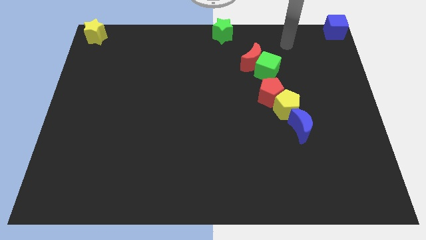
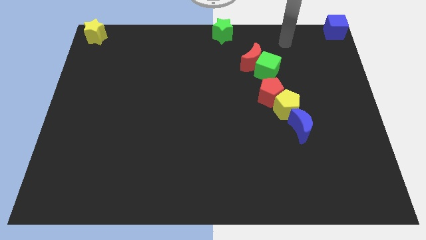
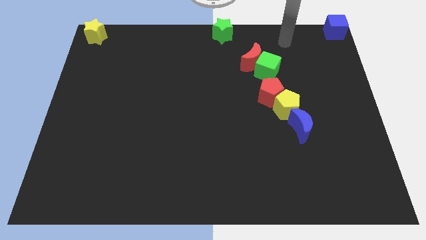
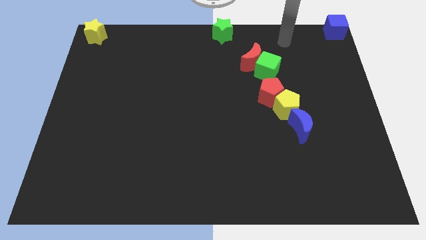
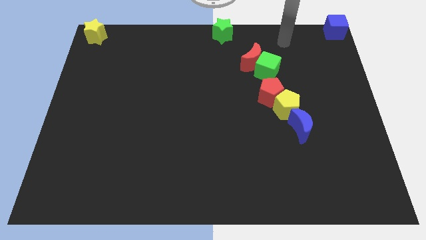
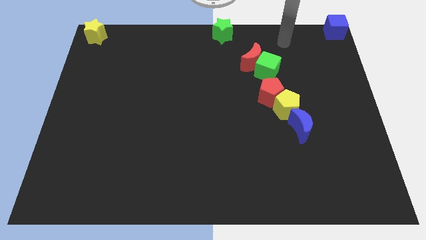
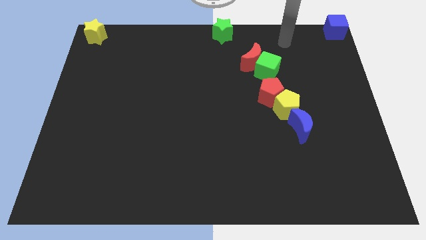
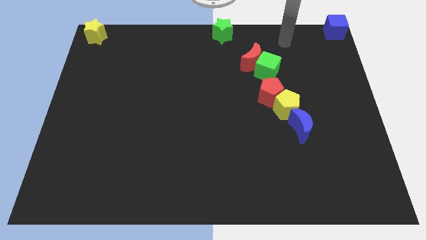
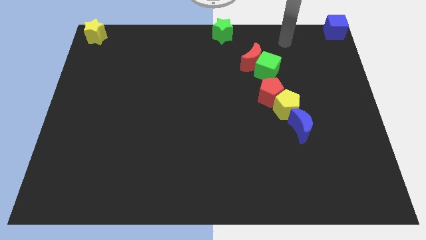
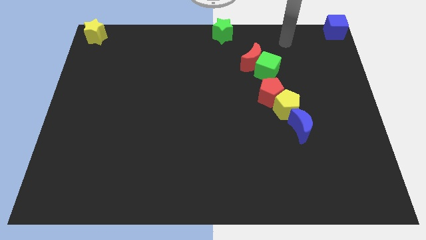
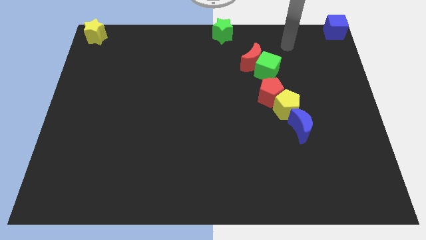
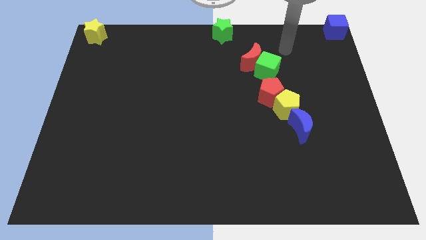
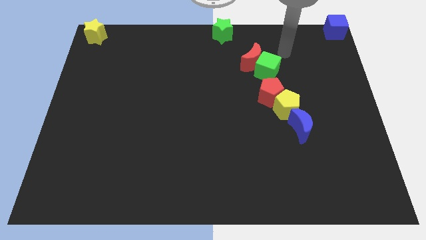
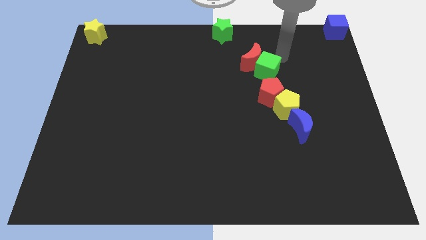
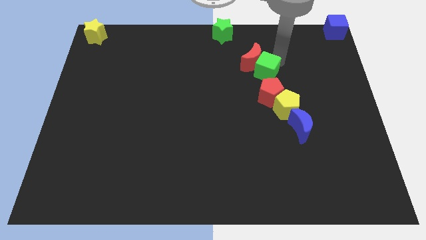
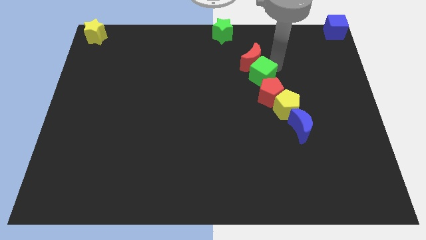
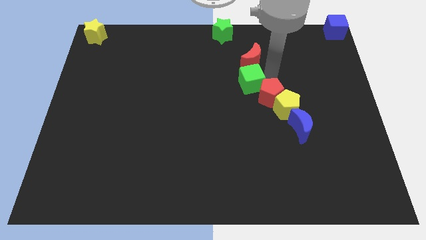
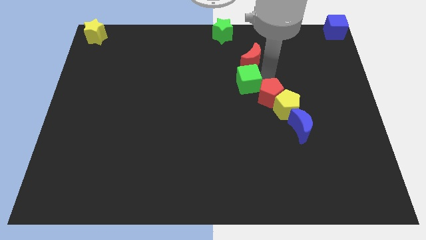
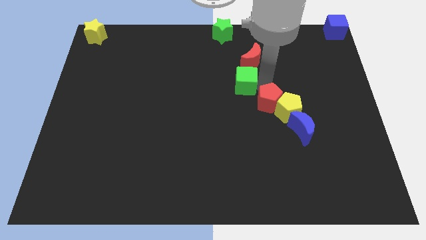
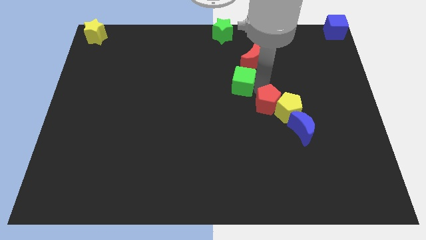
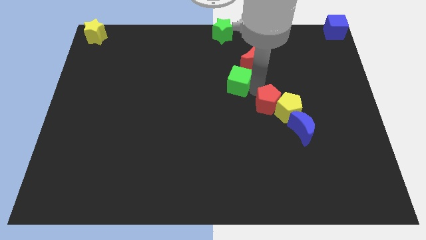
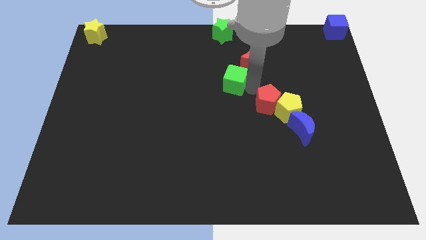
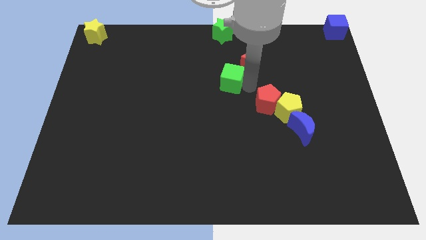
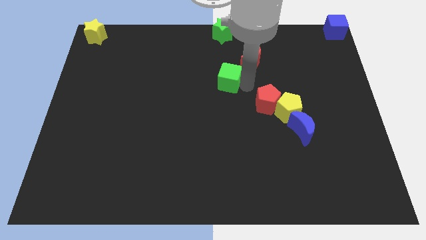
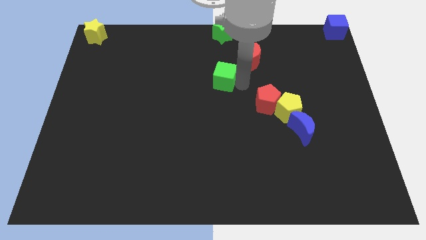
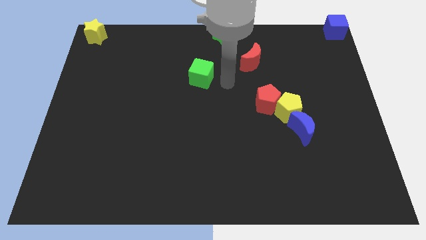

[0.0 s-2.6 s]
separate the green cube and red pentagon

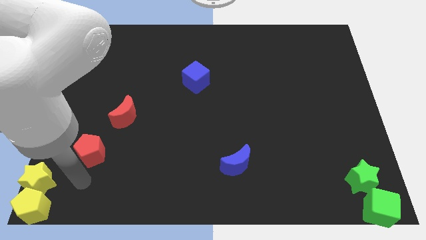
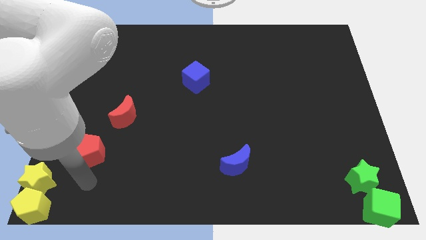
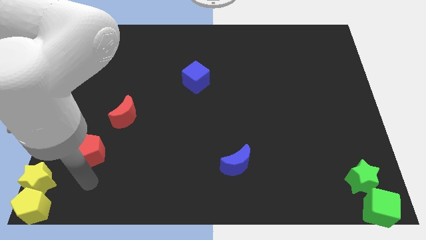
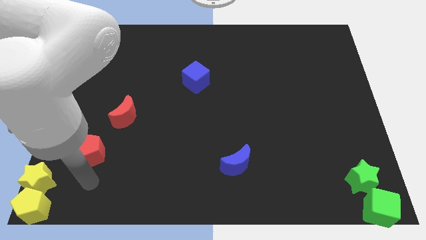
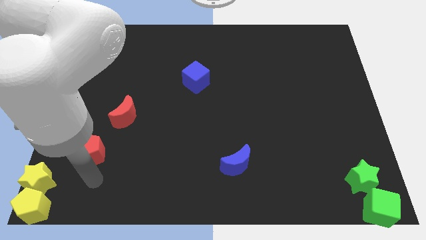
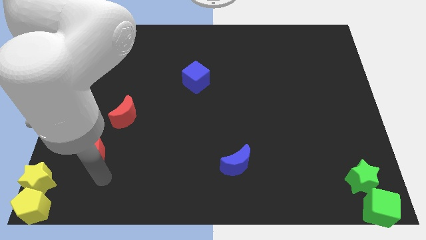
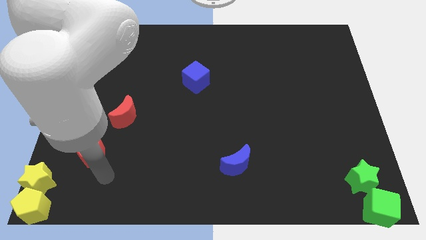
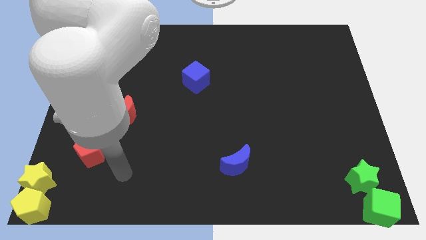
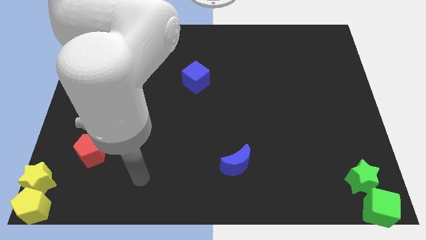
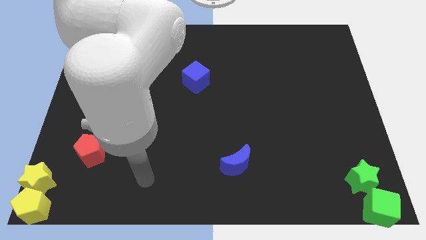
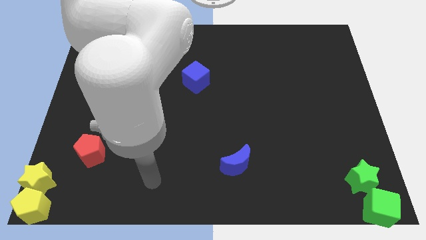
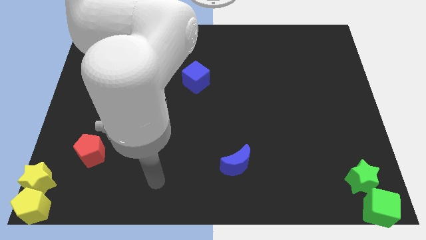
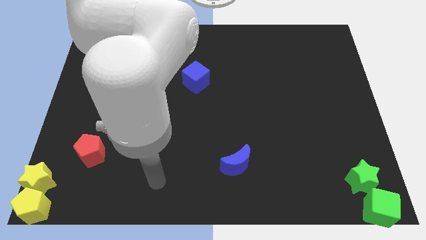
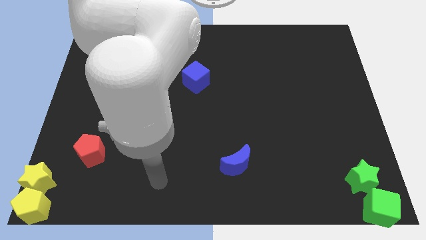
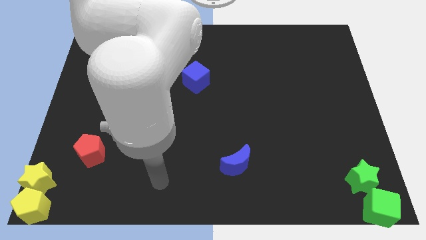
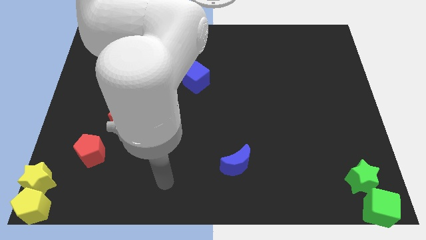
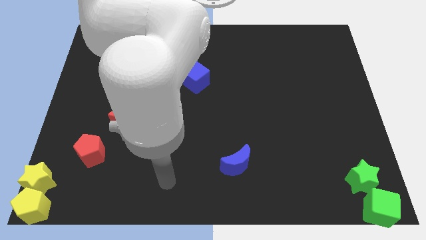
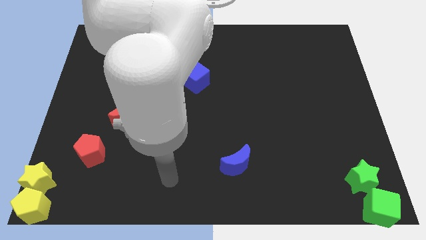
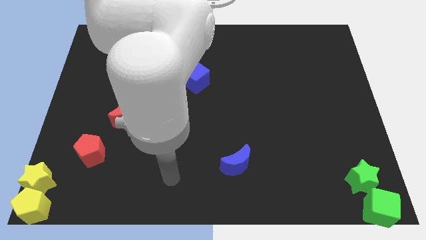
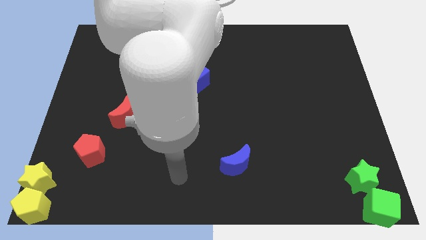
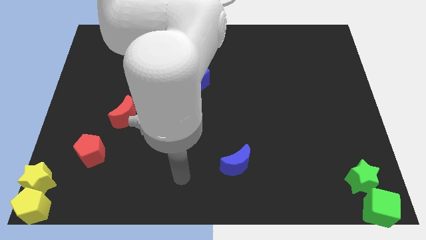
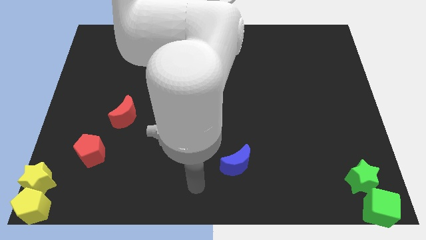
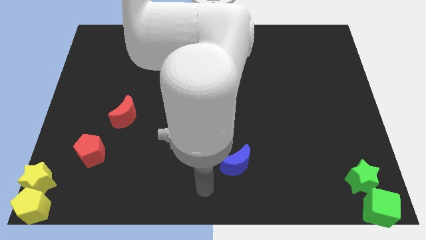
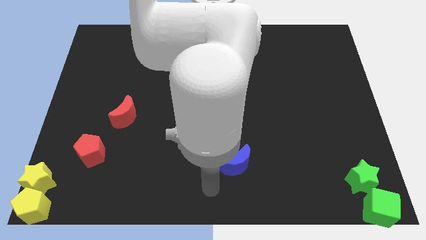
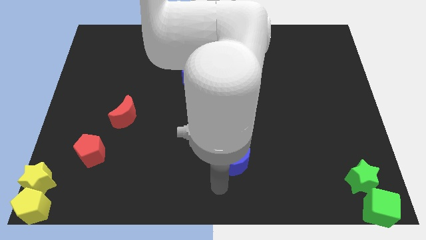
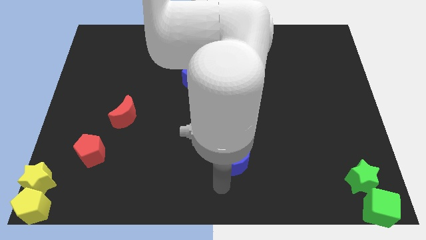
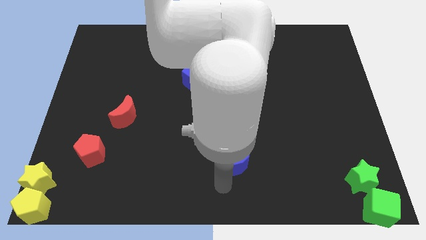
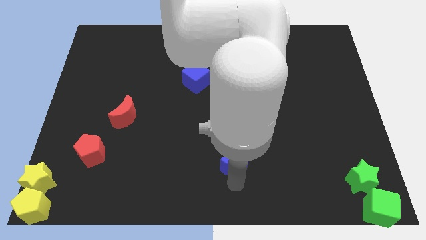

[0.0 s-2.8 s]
move your arm and point at the bottom of the blue moon

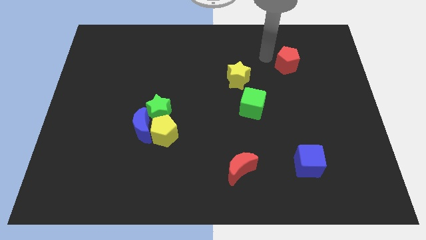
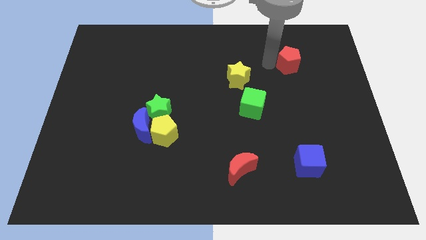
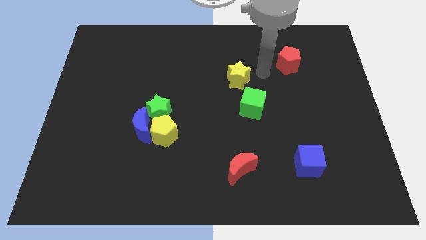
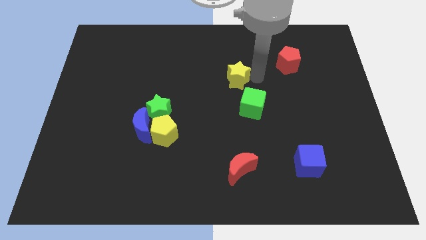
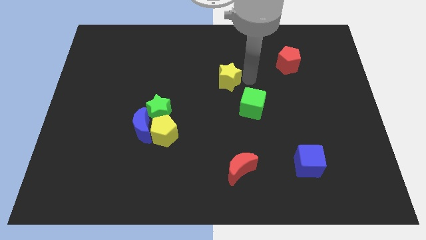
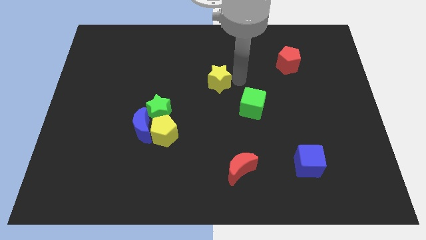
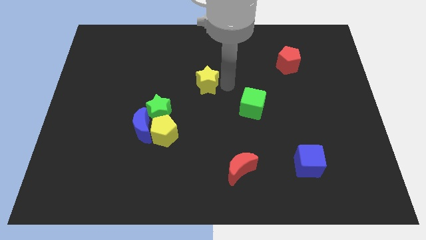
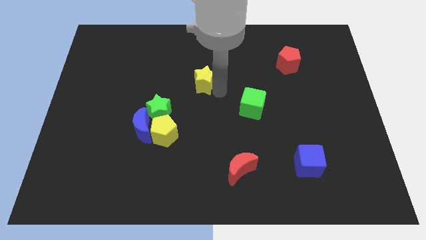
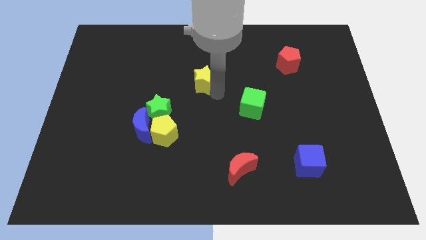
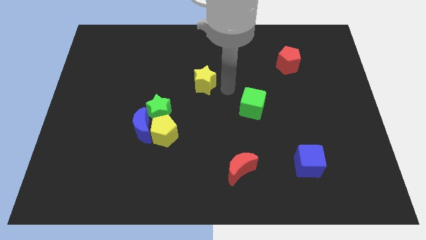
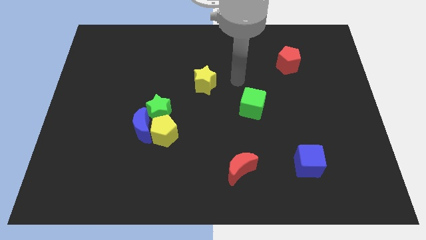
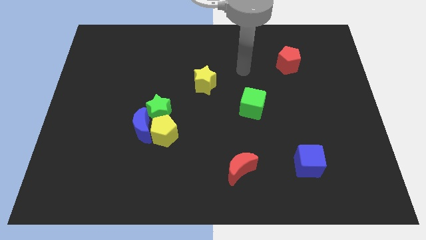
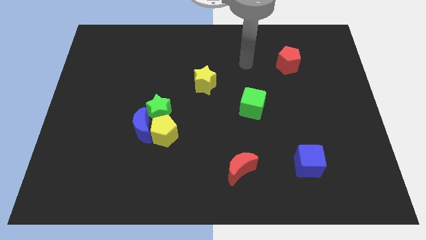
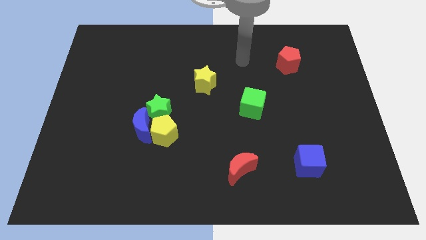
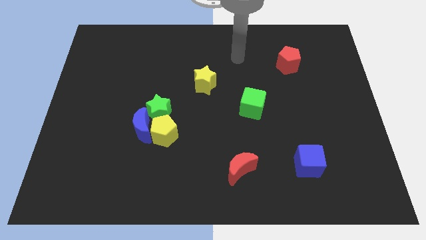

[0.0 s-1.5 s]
move the yellow star to the left

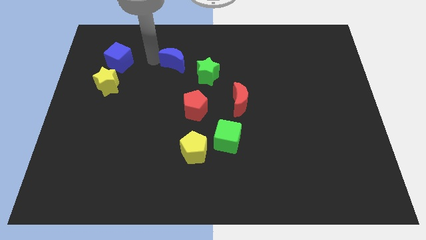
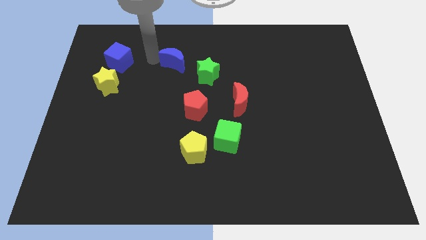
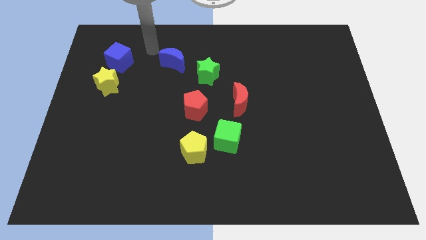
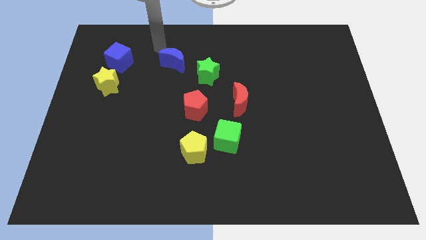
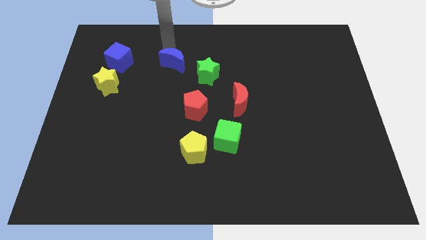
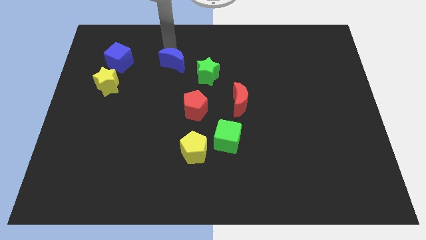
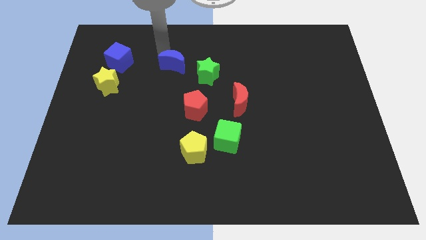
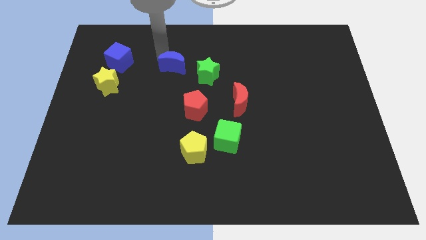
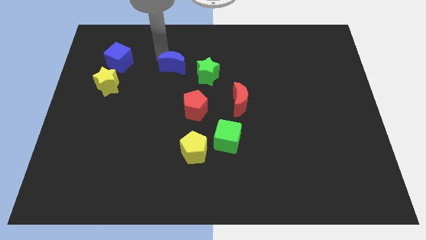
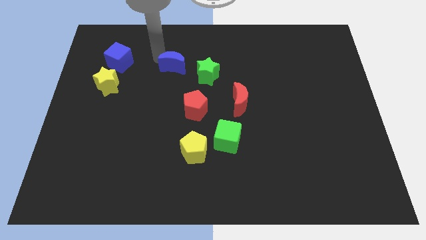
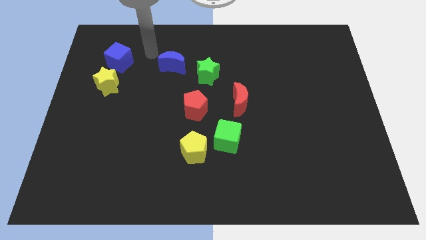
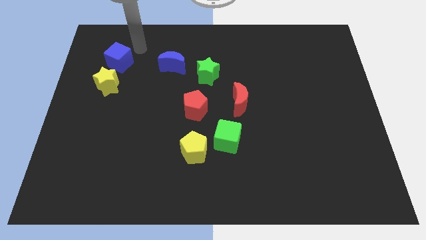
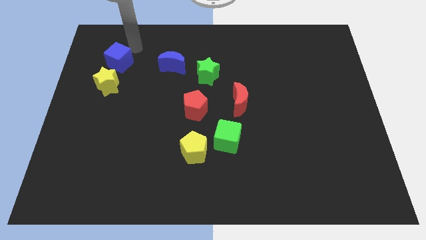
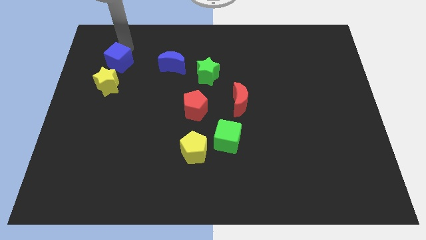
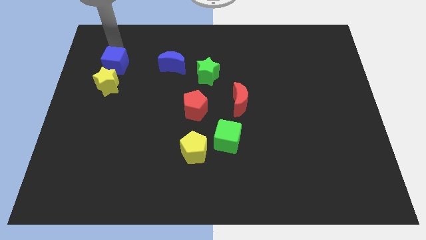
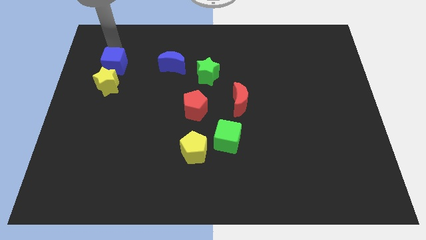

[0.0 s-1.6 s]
place your arm above blue cube

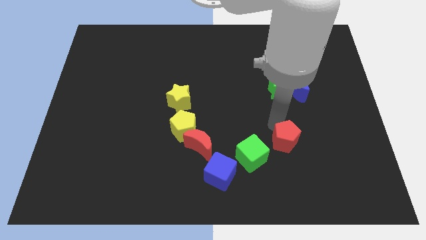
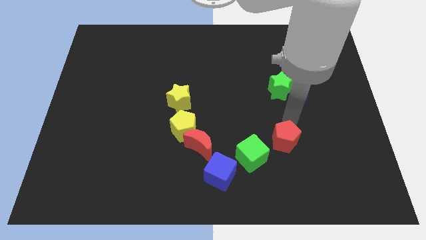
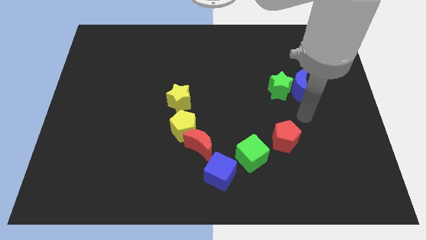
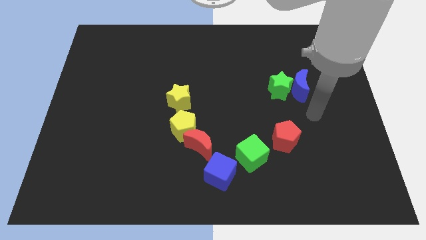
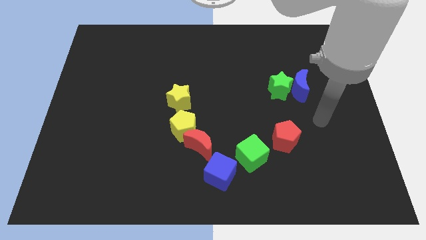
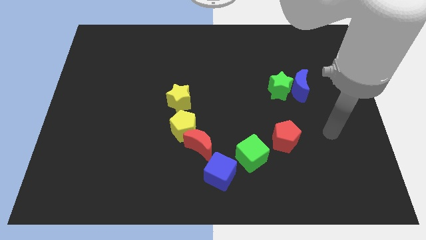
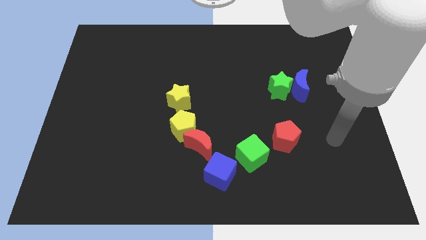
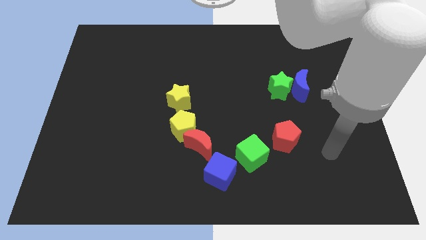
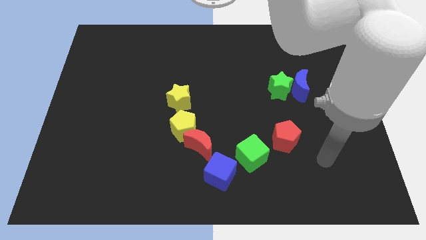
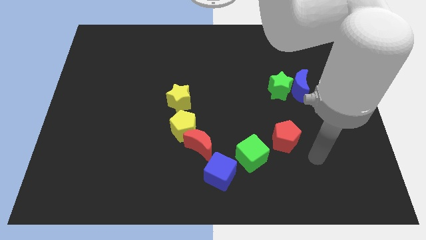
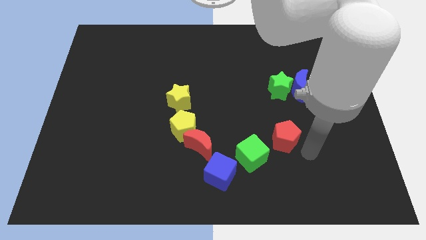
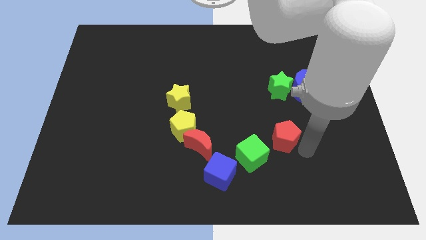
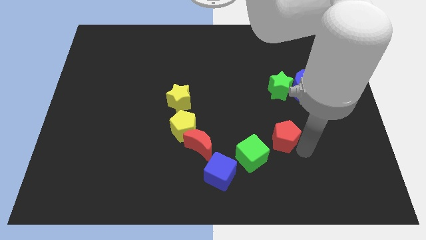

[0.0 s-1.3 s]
move the arm near the red pentagon
